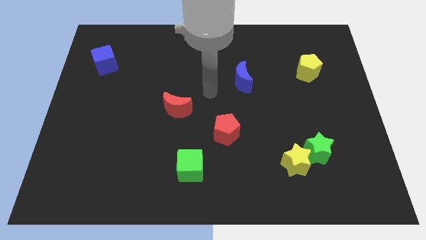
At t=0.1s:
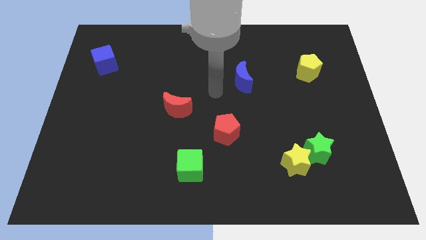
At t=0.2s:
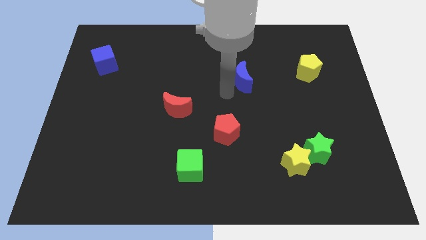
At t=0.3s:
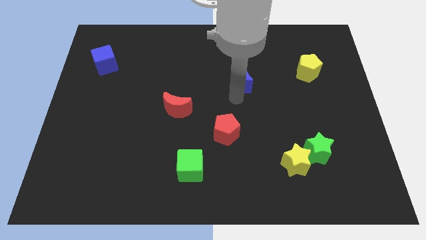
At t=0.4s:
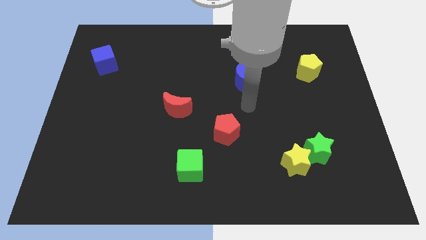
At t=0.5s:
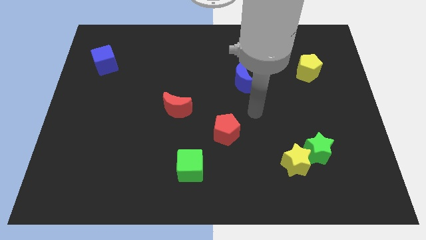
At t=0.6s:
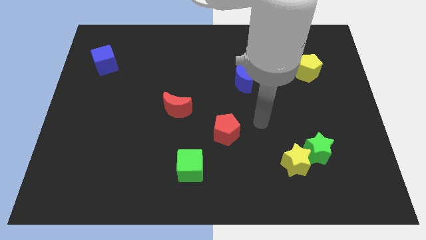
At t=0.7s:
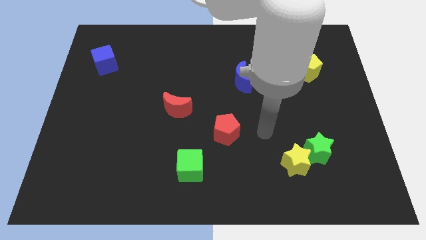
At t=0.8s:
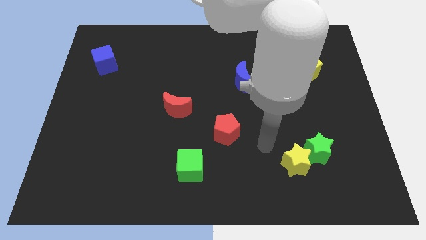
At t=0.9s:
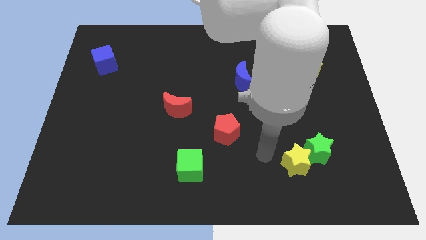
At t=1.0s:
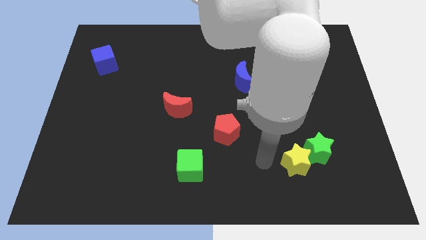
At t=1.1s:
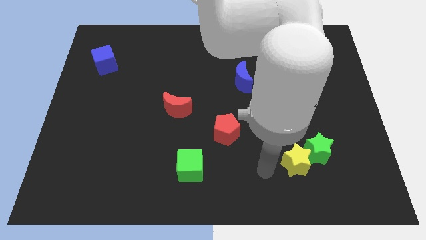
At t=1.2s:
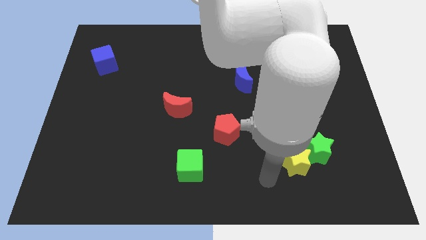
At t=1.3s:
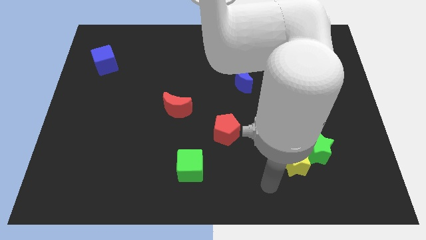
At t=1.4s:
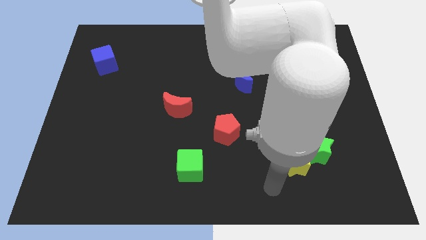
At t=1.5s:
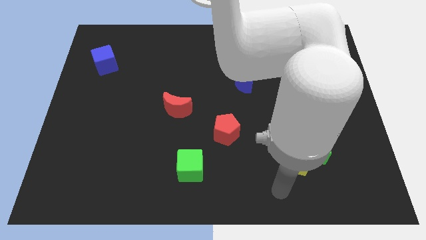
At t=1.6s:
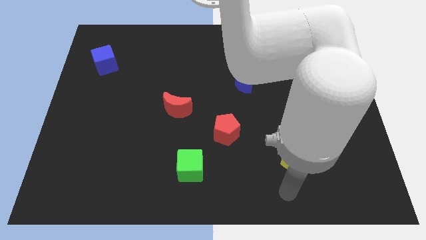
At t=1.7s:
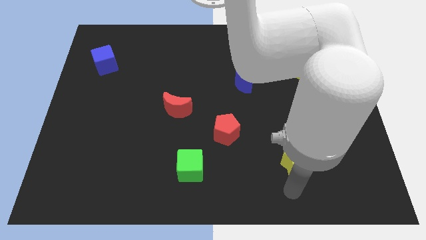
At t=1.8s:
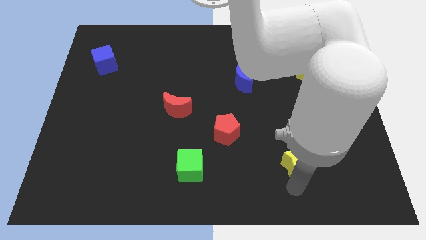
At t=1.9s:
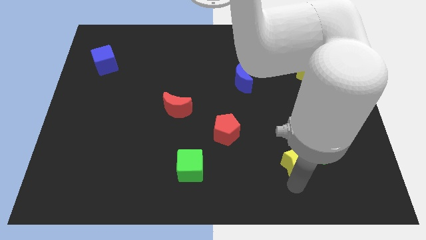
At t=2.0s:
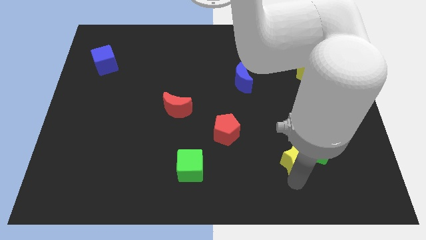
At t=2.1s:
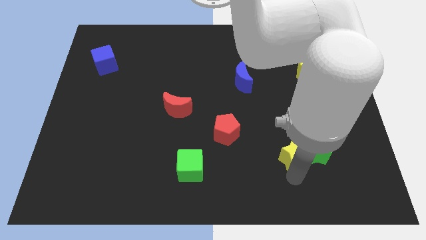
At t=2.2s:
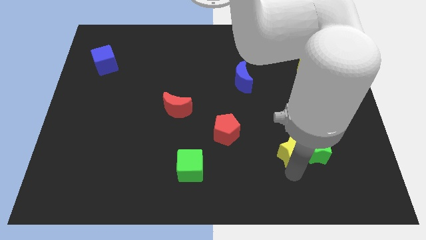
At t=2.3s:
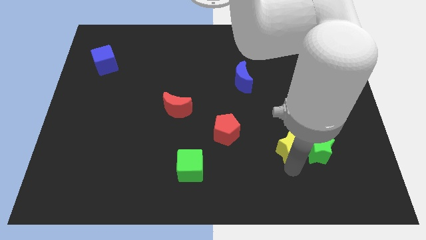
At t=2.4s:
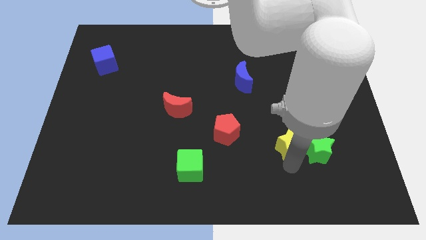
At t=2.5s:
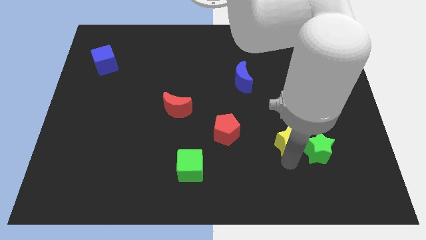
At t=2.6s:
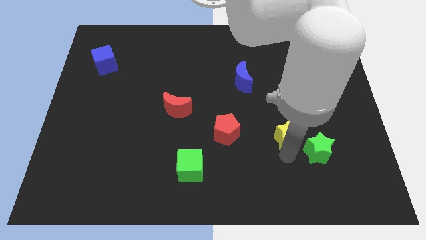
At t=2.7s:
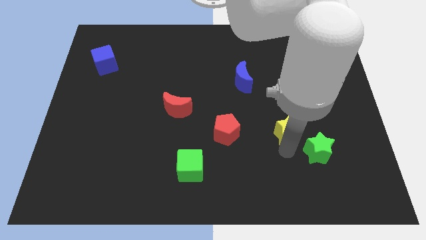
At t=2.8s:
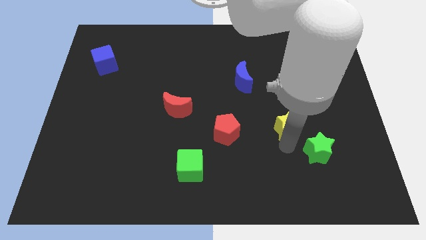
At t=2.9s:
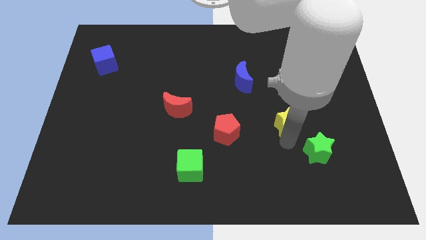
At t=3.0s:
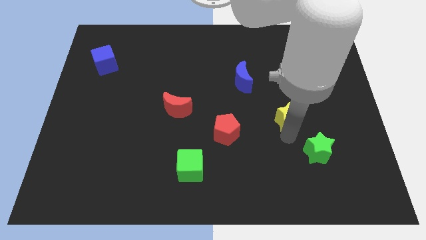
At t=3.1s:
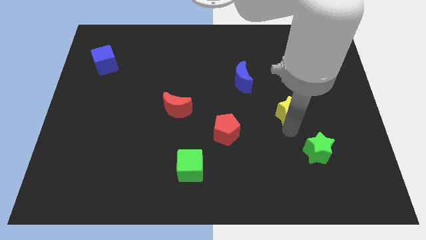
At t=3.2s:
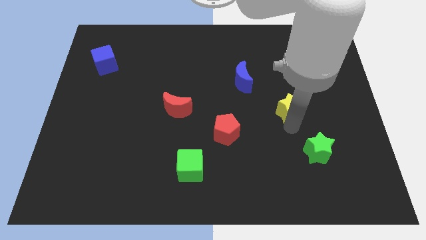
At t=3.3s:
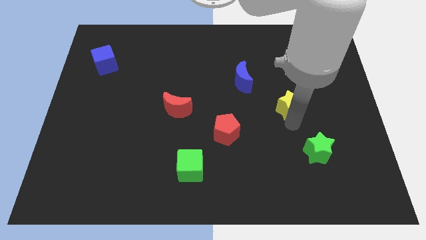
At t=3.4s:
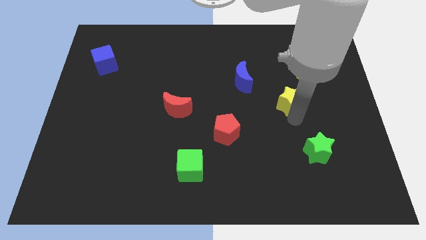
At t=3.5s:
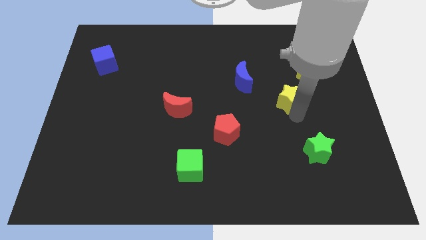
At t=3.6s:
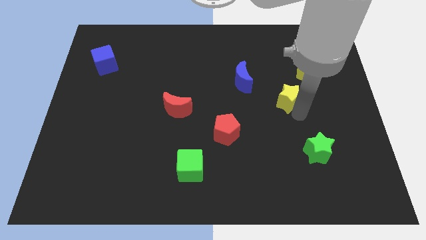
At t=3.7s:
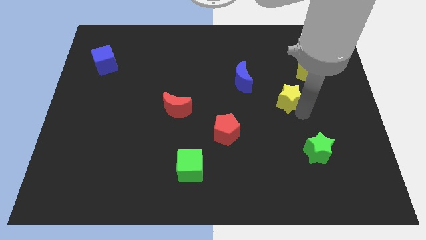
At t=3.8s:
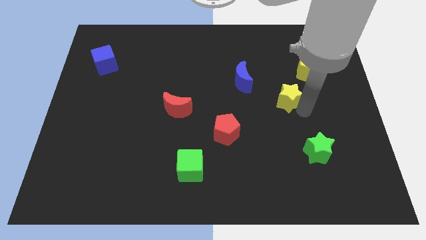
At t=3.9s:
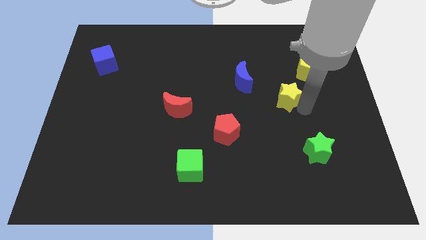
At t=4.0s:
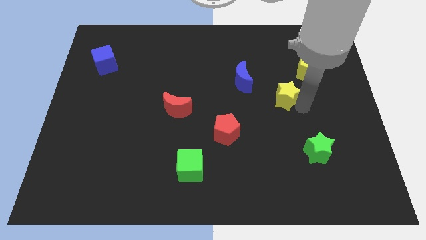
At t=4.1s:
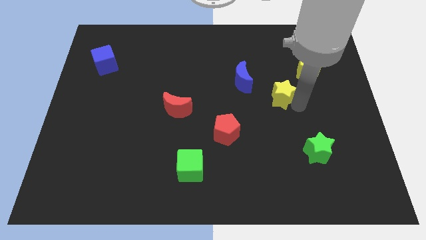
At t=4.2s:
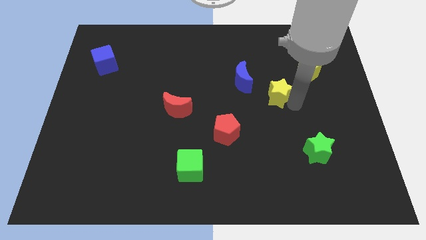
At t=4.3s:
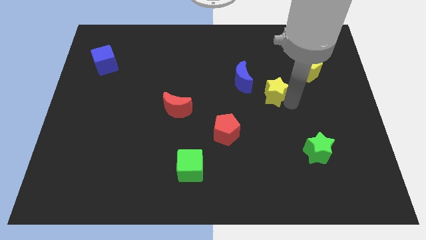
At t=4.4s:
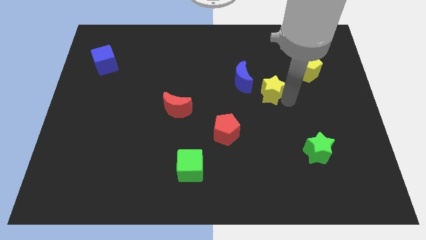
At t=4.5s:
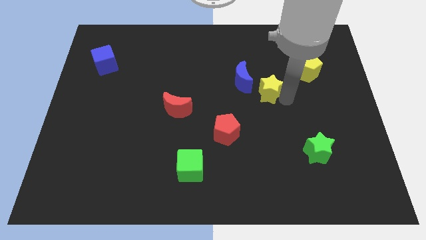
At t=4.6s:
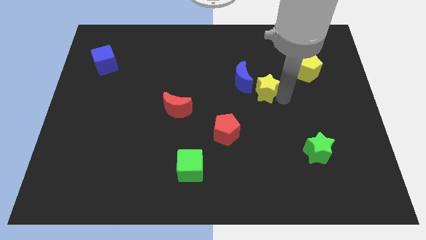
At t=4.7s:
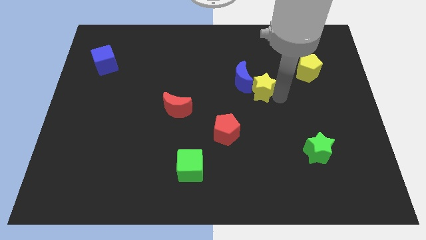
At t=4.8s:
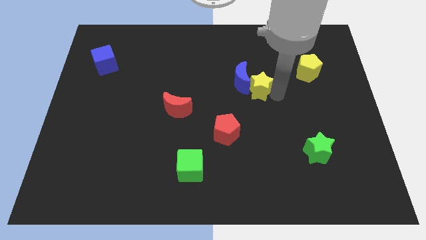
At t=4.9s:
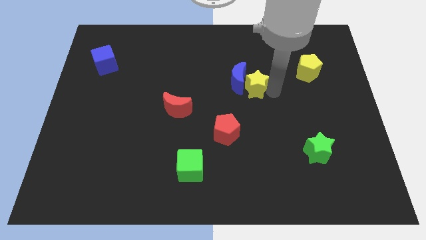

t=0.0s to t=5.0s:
push the yellow star close to the blue moon

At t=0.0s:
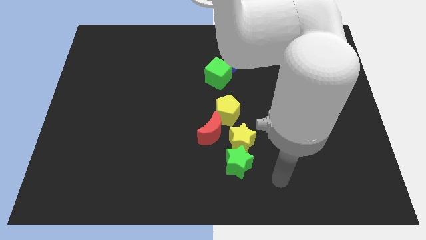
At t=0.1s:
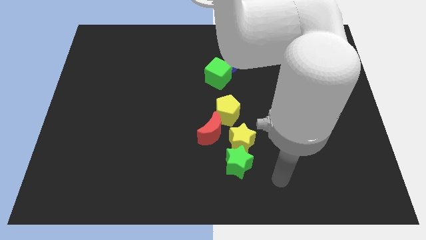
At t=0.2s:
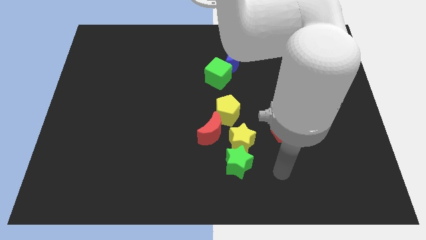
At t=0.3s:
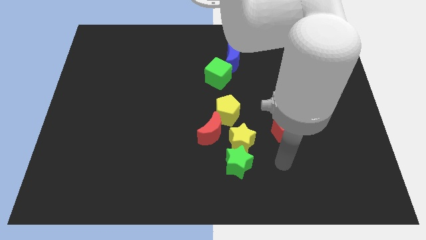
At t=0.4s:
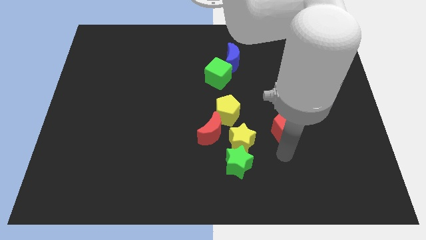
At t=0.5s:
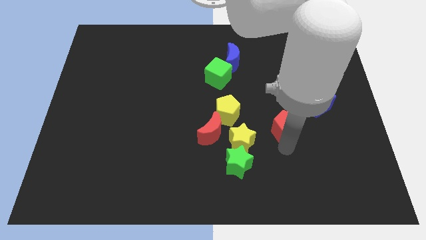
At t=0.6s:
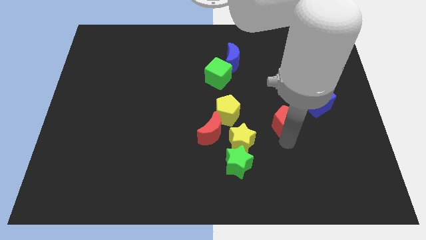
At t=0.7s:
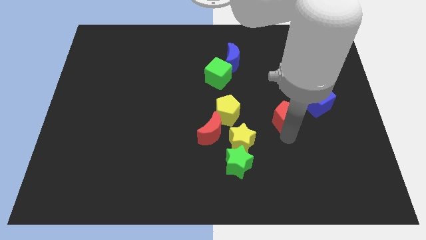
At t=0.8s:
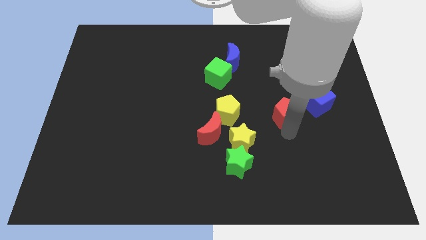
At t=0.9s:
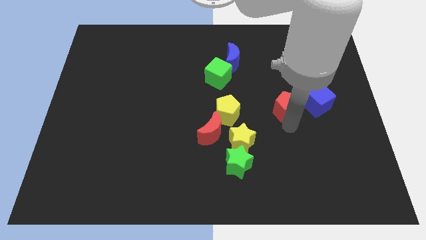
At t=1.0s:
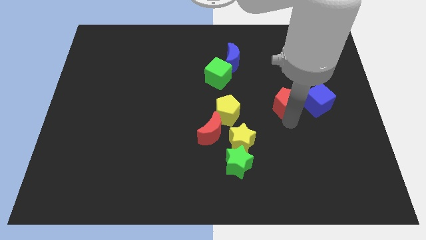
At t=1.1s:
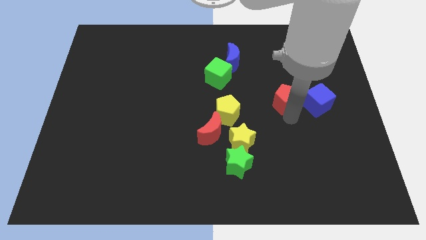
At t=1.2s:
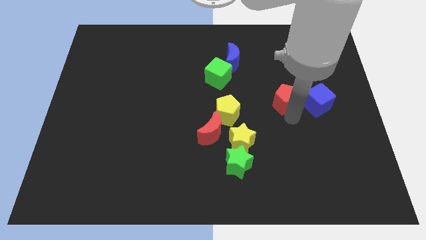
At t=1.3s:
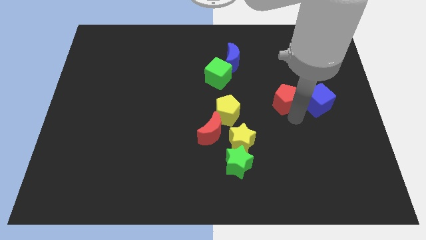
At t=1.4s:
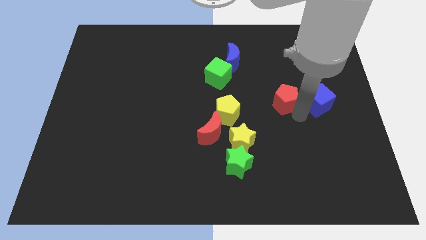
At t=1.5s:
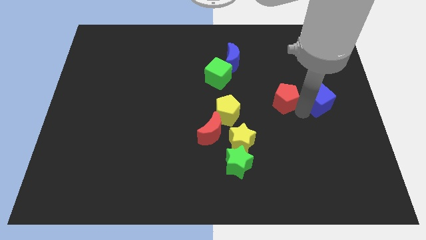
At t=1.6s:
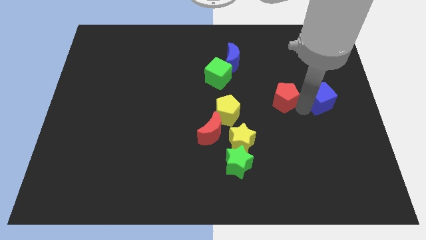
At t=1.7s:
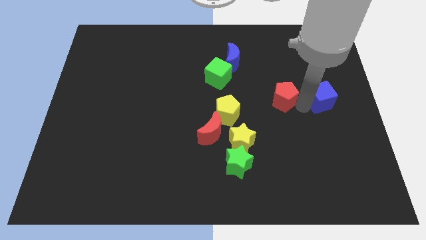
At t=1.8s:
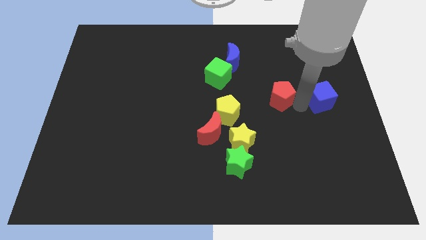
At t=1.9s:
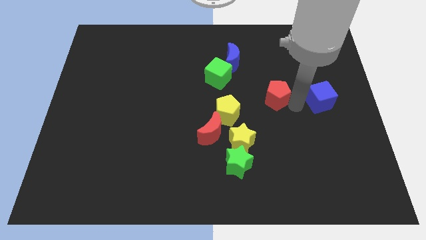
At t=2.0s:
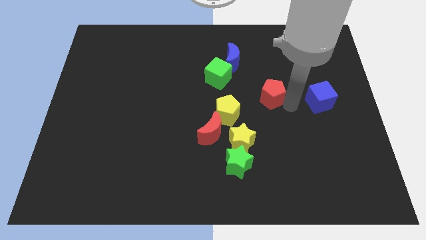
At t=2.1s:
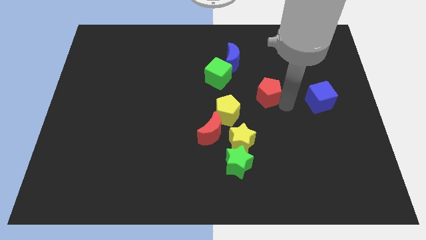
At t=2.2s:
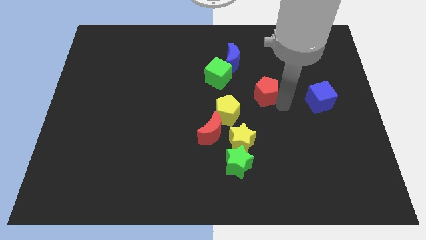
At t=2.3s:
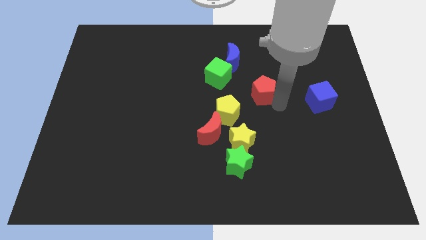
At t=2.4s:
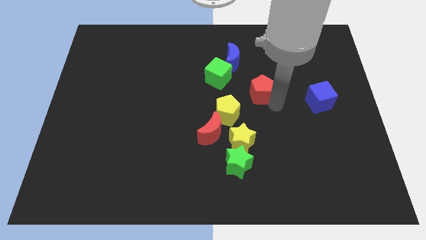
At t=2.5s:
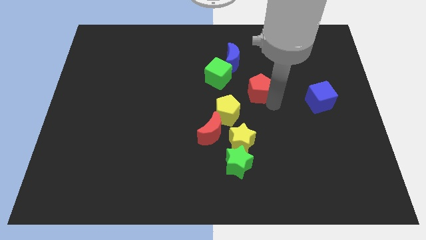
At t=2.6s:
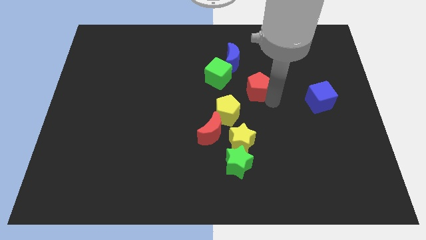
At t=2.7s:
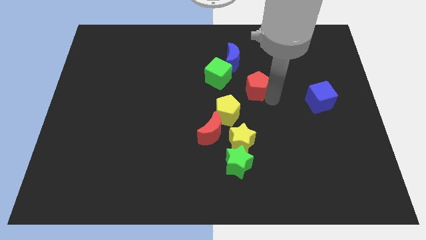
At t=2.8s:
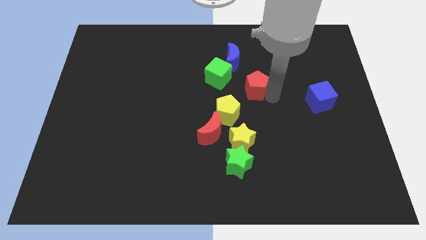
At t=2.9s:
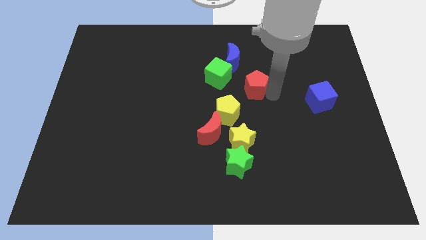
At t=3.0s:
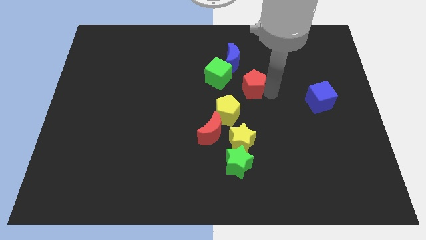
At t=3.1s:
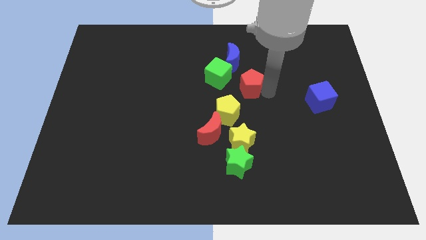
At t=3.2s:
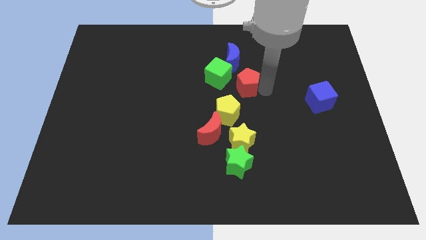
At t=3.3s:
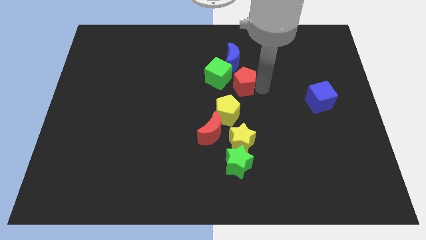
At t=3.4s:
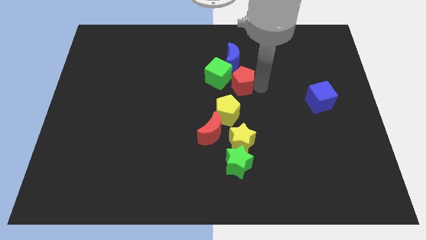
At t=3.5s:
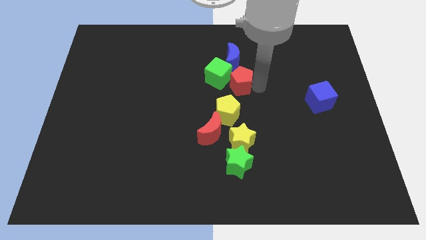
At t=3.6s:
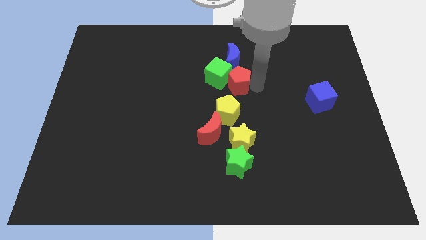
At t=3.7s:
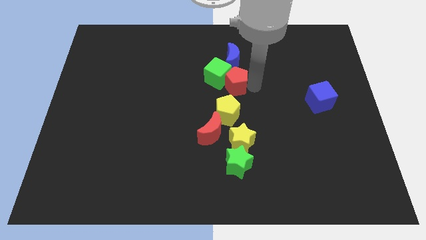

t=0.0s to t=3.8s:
move the red pentagon close to the green cube
